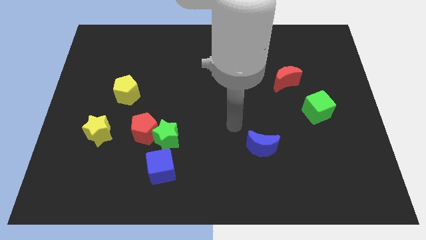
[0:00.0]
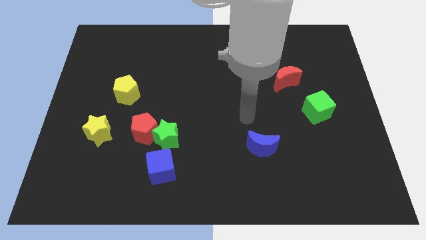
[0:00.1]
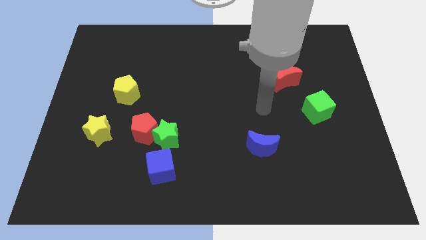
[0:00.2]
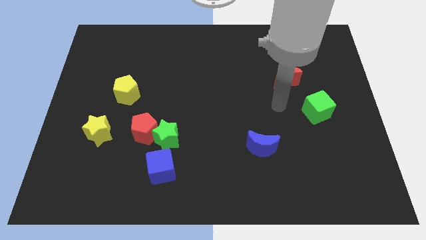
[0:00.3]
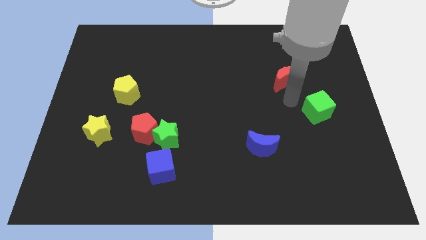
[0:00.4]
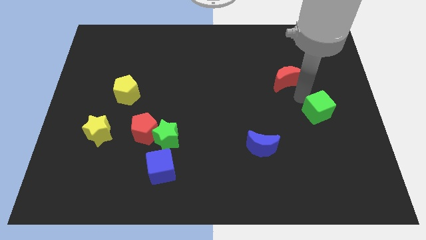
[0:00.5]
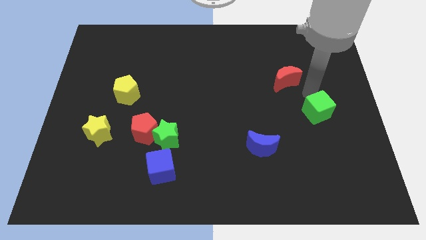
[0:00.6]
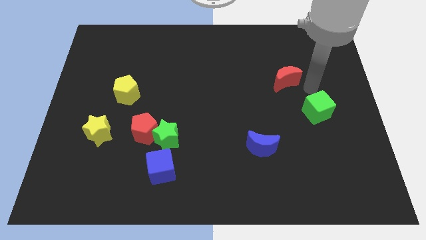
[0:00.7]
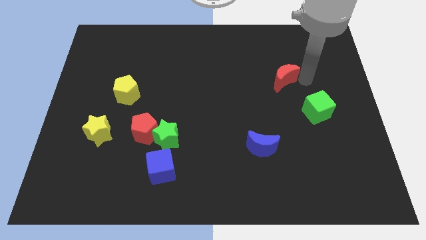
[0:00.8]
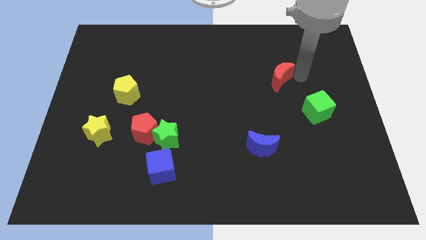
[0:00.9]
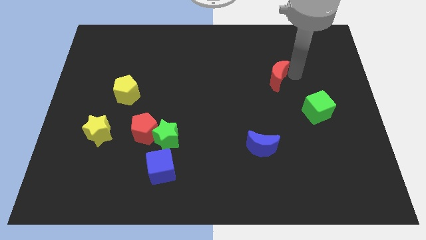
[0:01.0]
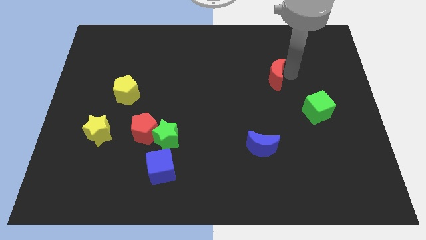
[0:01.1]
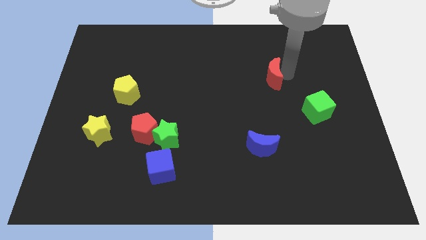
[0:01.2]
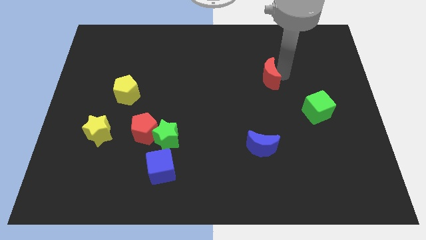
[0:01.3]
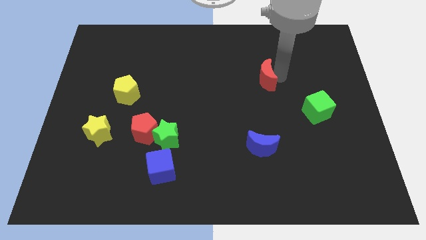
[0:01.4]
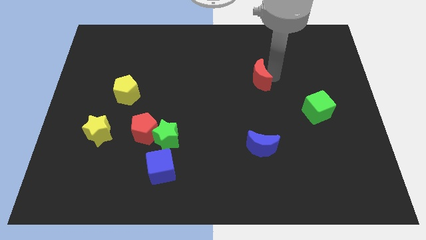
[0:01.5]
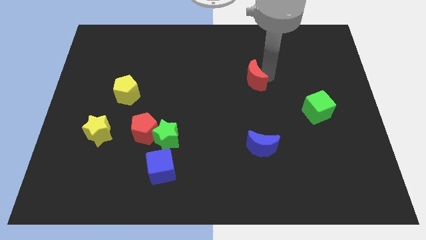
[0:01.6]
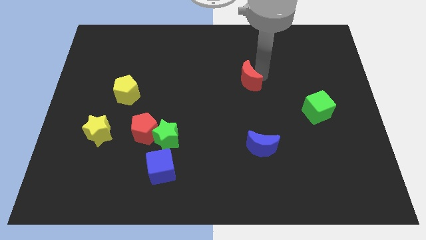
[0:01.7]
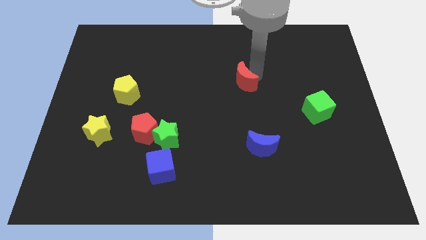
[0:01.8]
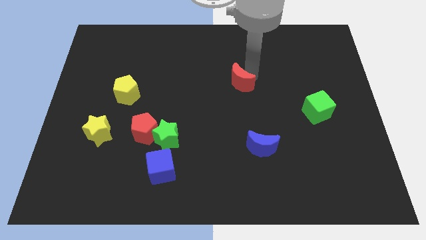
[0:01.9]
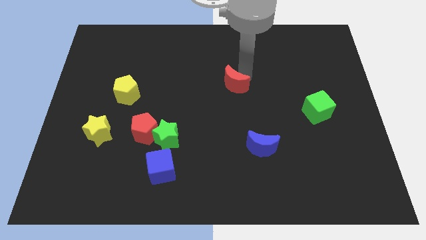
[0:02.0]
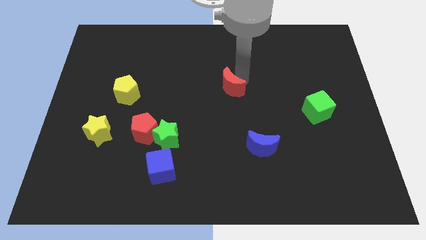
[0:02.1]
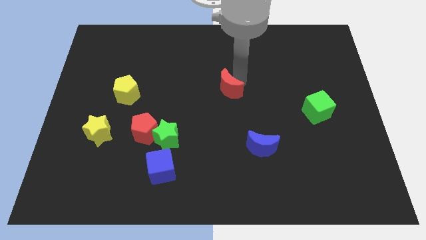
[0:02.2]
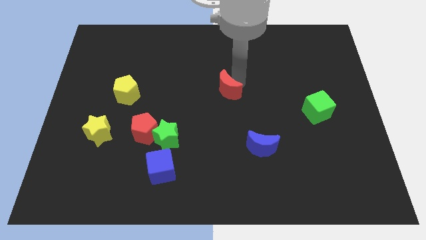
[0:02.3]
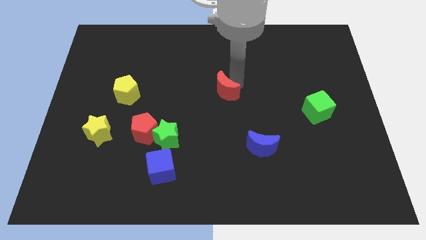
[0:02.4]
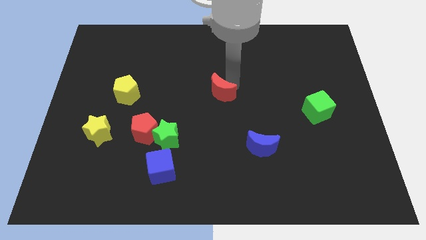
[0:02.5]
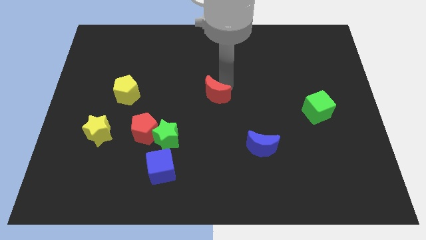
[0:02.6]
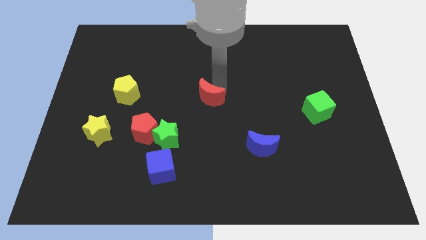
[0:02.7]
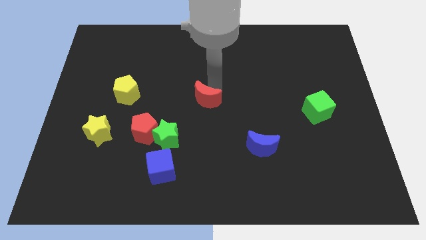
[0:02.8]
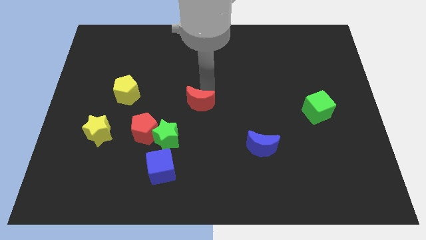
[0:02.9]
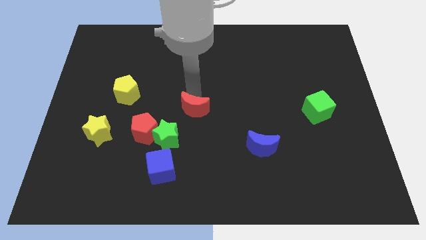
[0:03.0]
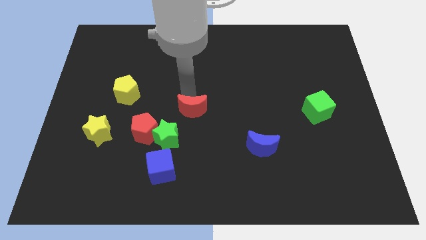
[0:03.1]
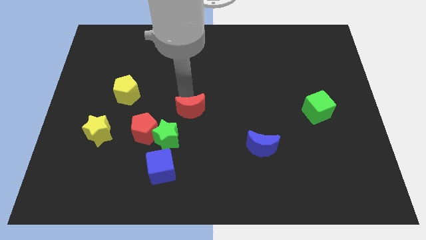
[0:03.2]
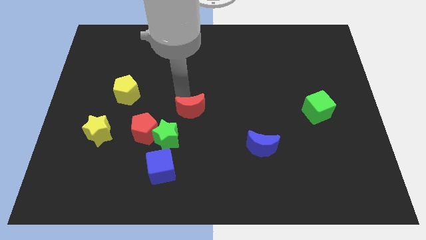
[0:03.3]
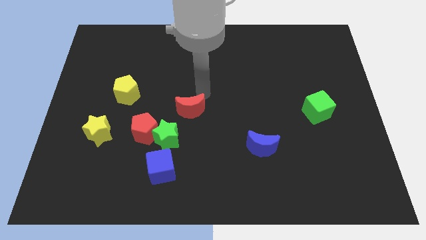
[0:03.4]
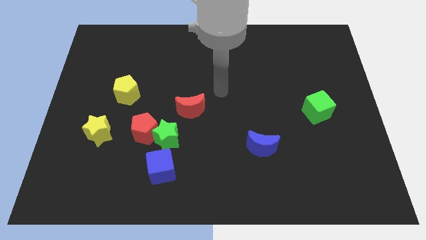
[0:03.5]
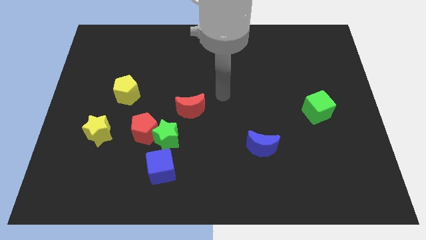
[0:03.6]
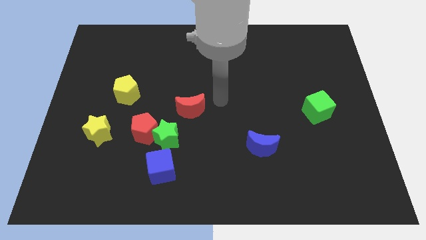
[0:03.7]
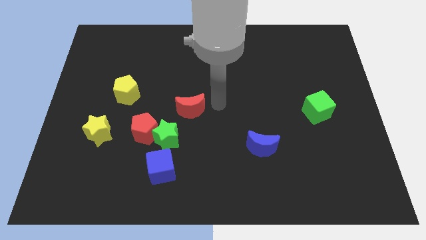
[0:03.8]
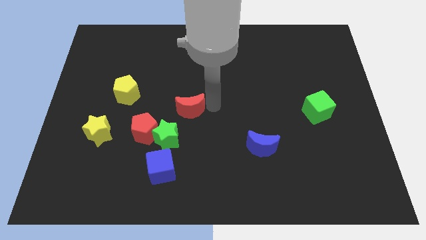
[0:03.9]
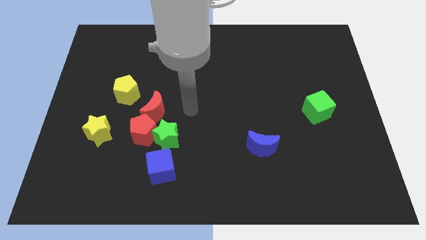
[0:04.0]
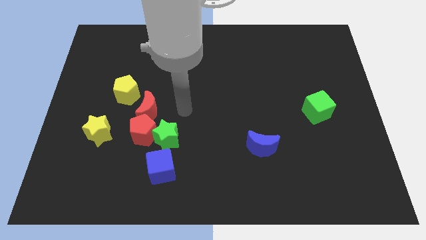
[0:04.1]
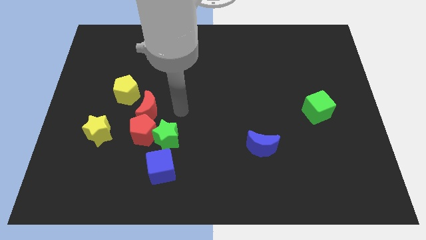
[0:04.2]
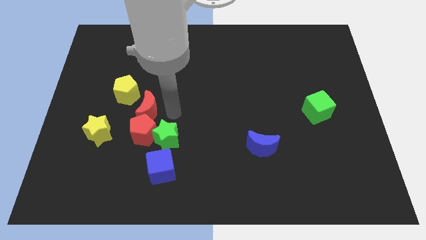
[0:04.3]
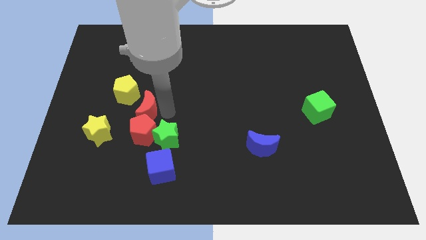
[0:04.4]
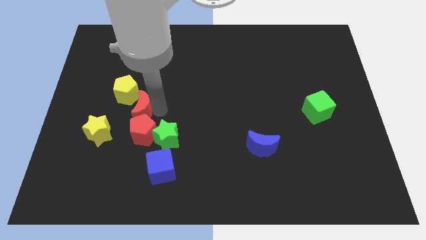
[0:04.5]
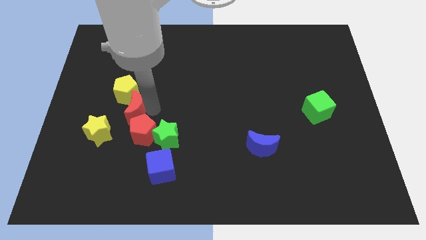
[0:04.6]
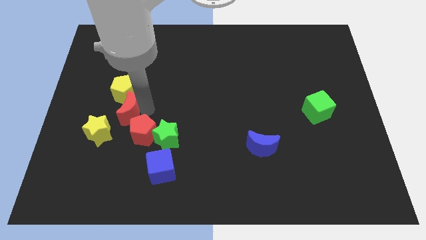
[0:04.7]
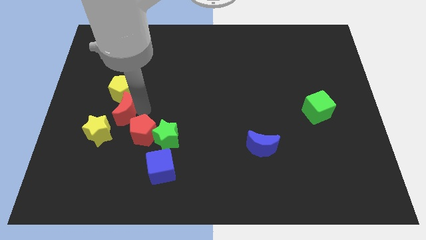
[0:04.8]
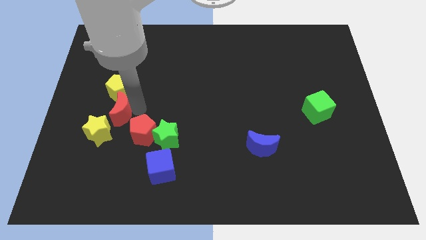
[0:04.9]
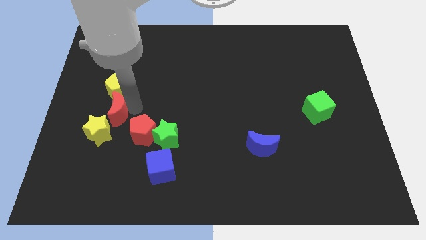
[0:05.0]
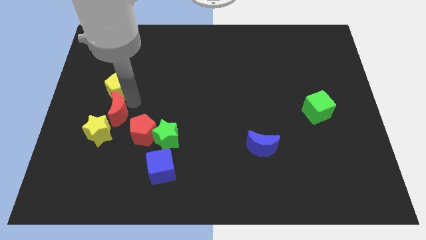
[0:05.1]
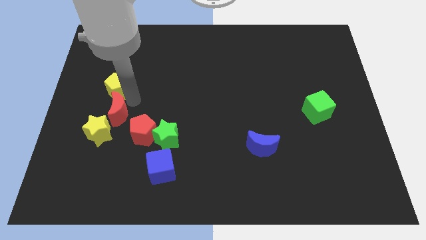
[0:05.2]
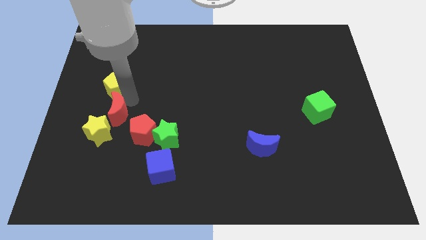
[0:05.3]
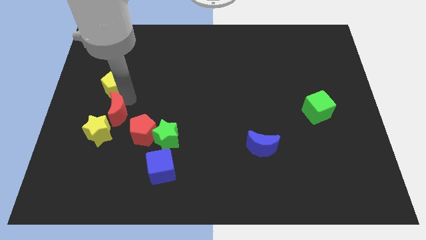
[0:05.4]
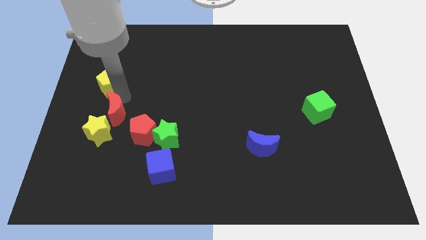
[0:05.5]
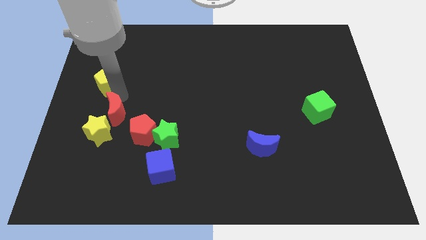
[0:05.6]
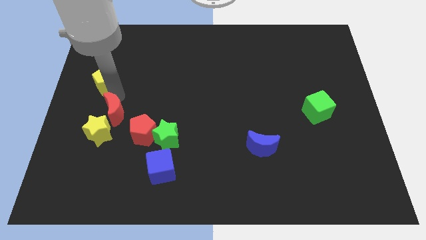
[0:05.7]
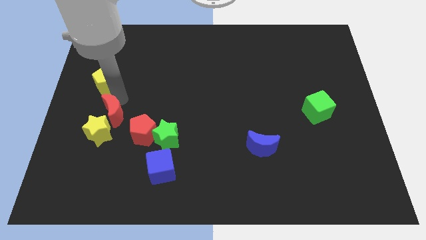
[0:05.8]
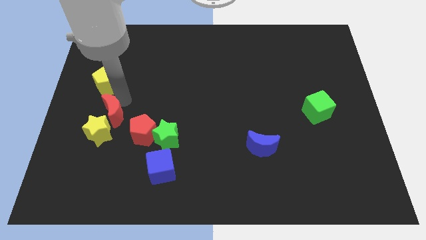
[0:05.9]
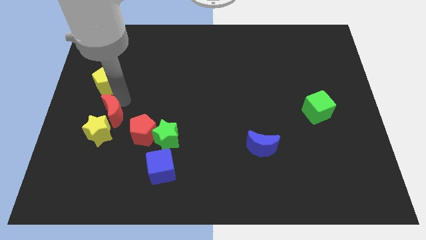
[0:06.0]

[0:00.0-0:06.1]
put the red moon close to the yellow star

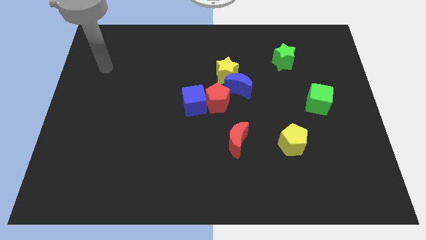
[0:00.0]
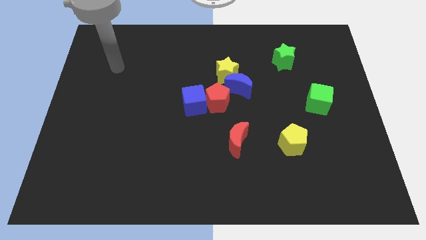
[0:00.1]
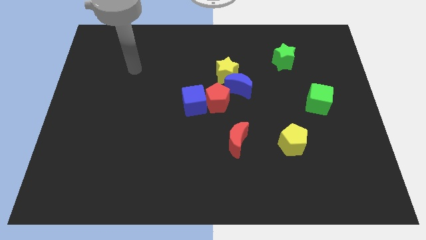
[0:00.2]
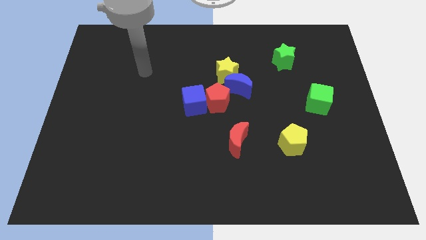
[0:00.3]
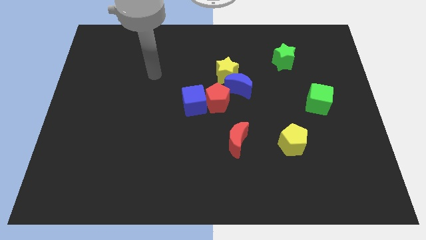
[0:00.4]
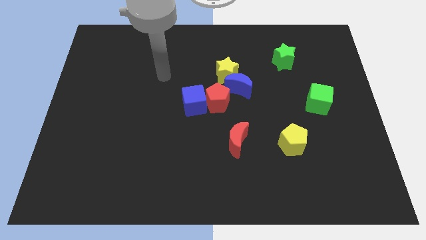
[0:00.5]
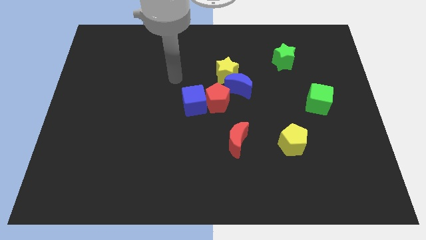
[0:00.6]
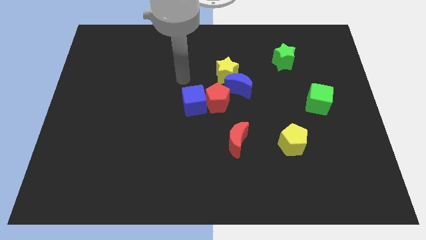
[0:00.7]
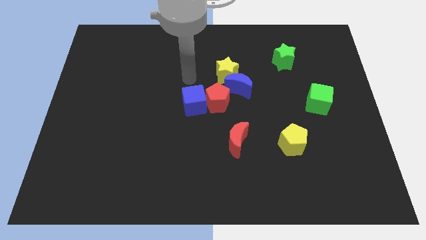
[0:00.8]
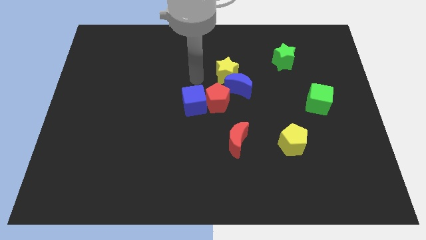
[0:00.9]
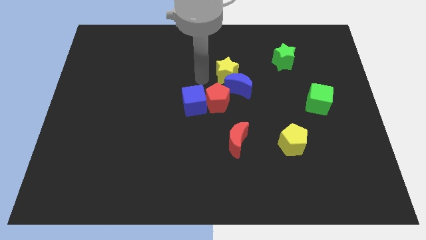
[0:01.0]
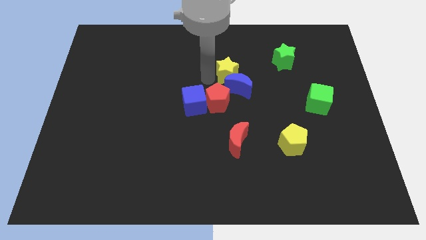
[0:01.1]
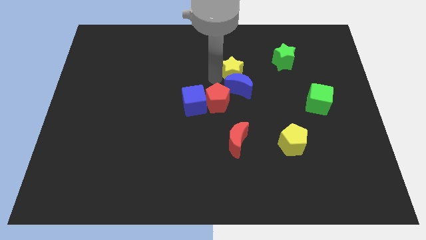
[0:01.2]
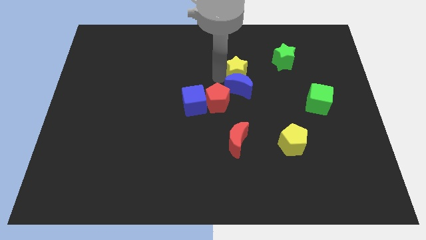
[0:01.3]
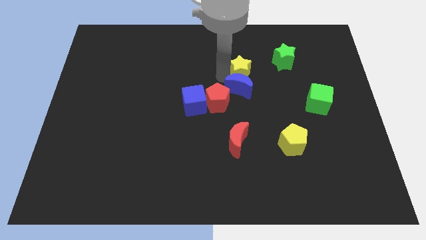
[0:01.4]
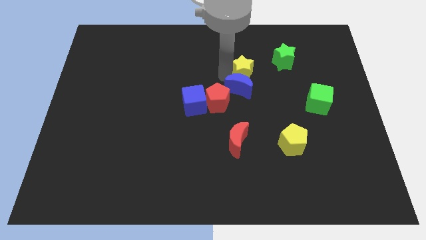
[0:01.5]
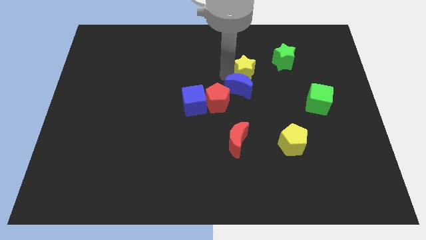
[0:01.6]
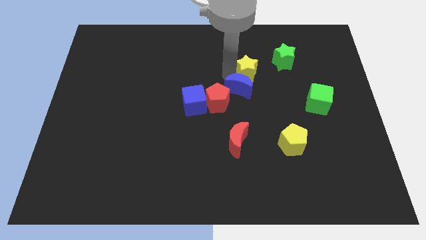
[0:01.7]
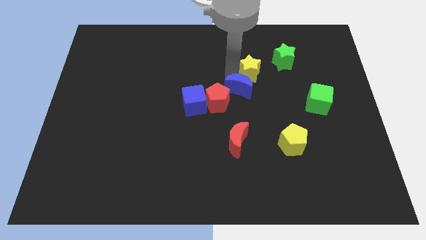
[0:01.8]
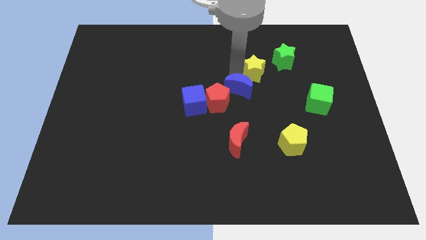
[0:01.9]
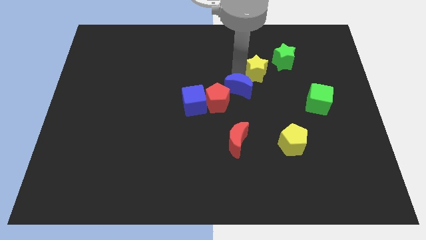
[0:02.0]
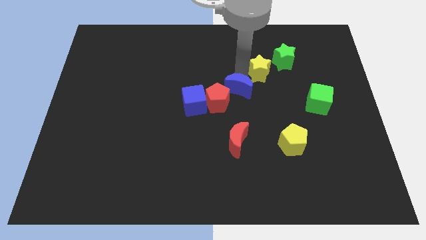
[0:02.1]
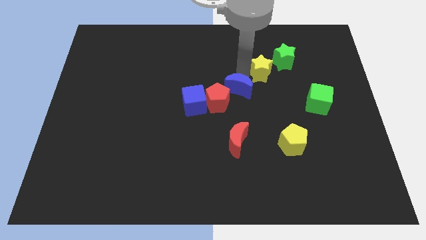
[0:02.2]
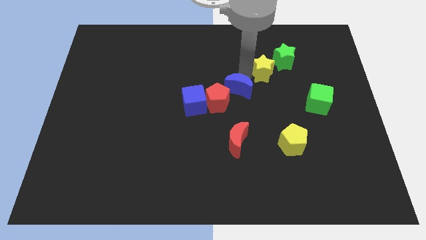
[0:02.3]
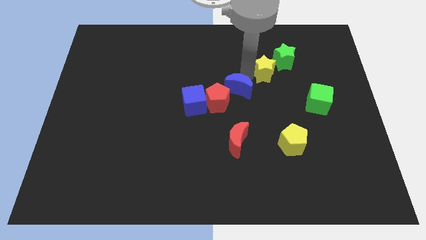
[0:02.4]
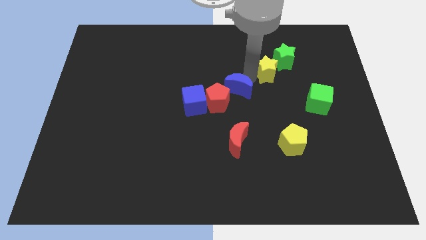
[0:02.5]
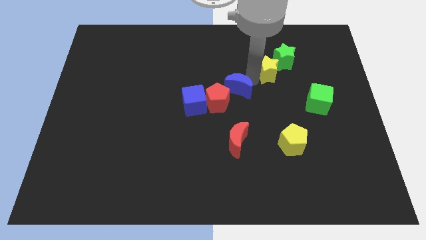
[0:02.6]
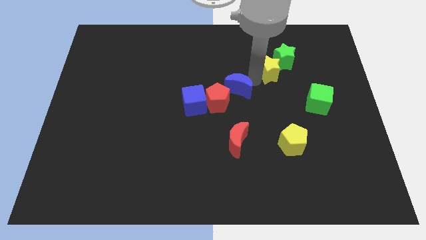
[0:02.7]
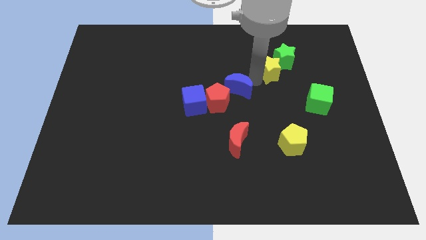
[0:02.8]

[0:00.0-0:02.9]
put the yellow star next to the green star
